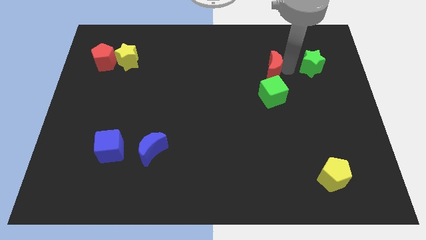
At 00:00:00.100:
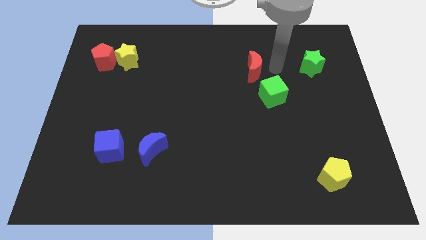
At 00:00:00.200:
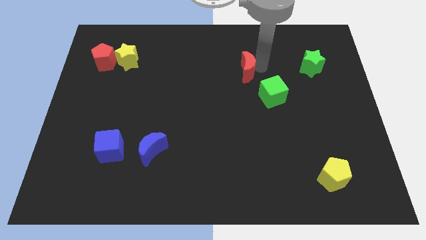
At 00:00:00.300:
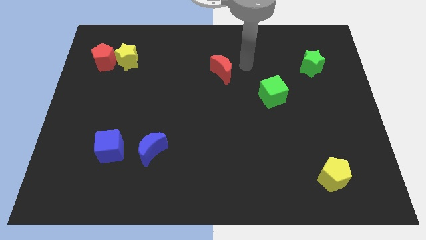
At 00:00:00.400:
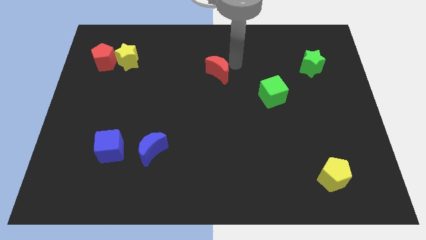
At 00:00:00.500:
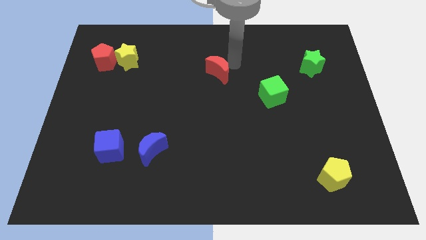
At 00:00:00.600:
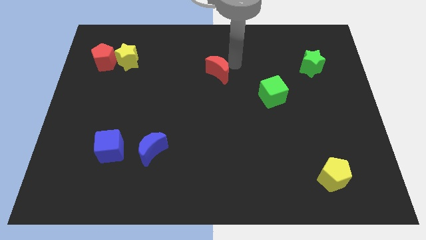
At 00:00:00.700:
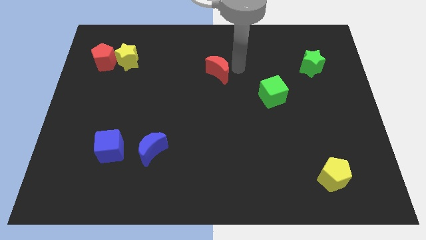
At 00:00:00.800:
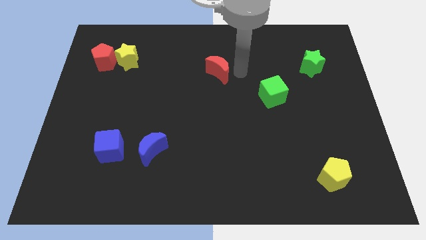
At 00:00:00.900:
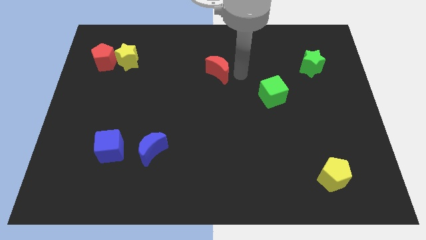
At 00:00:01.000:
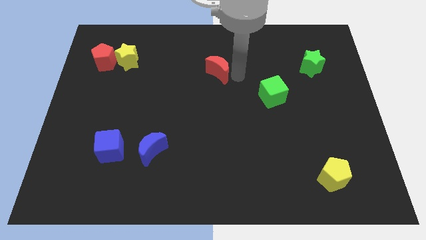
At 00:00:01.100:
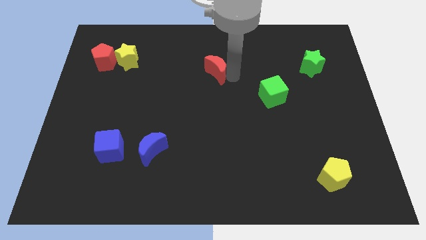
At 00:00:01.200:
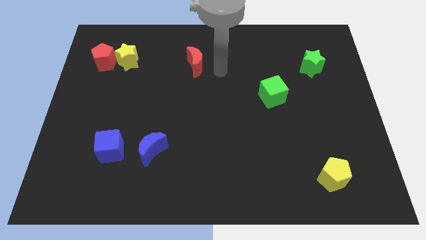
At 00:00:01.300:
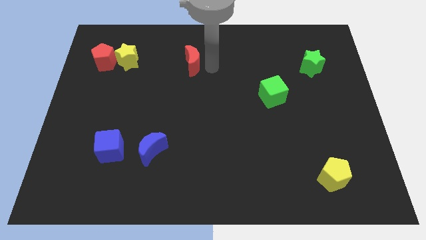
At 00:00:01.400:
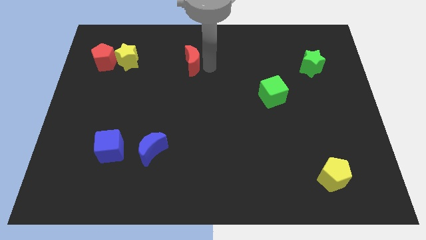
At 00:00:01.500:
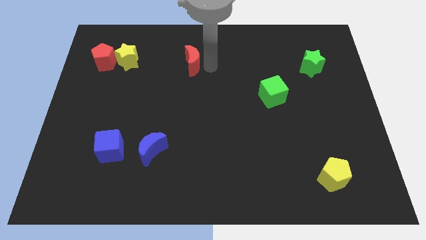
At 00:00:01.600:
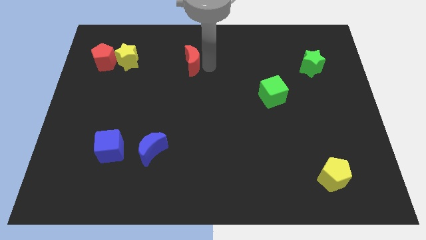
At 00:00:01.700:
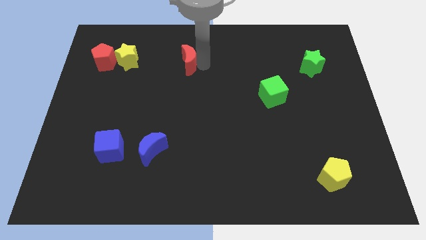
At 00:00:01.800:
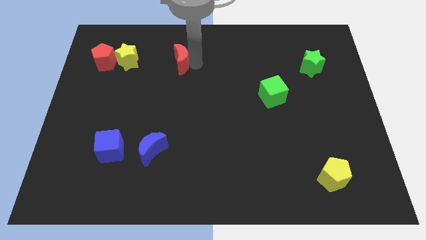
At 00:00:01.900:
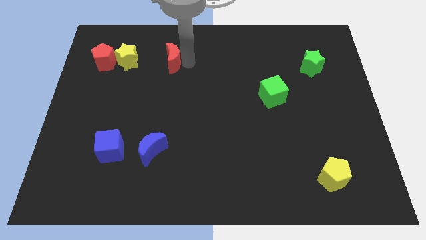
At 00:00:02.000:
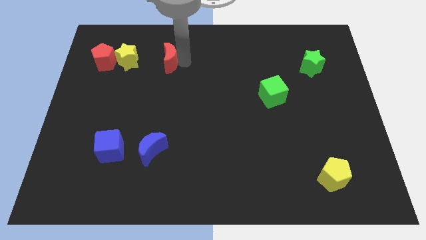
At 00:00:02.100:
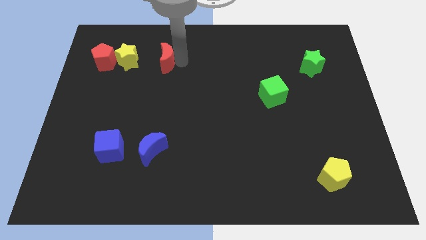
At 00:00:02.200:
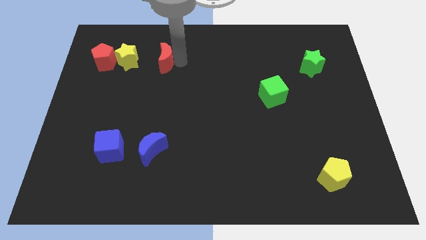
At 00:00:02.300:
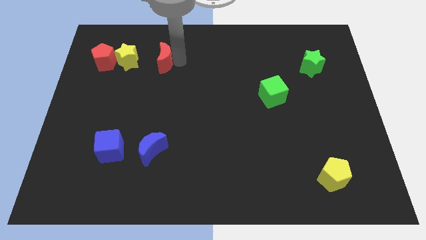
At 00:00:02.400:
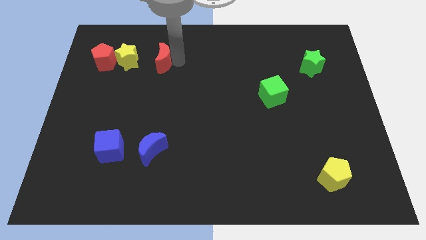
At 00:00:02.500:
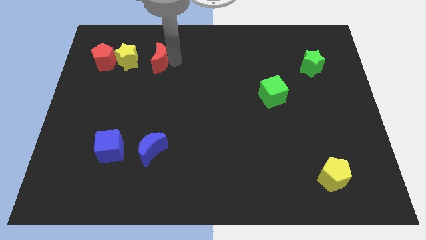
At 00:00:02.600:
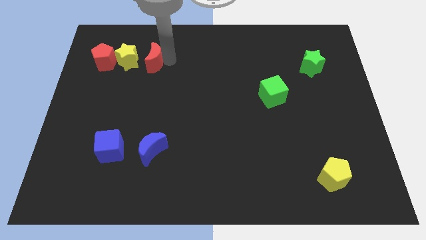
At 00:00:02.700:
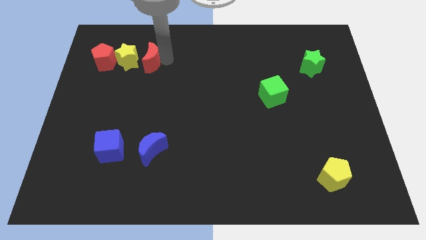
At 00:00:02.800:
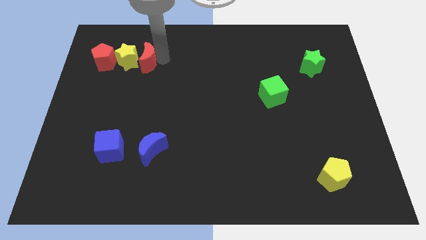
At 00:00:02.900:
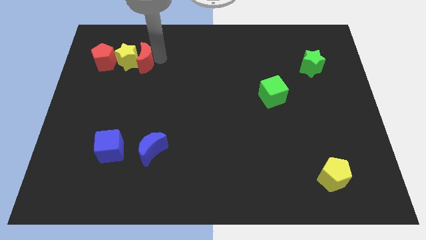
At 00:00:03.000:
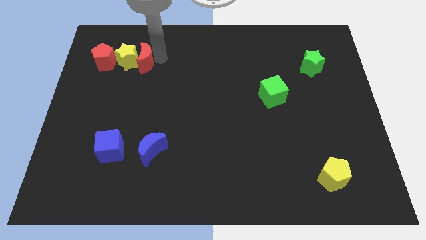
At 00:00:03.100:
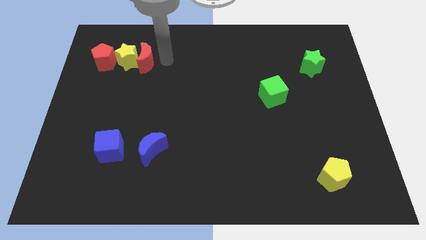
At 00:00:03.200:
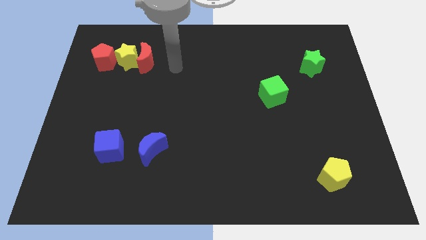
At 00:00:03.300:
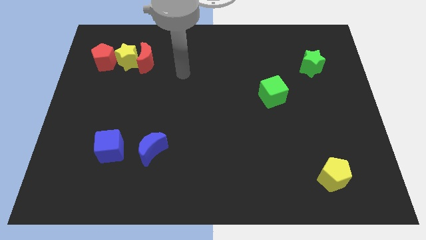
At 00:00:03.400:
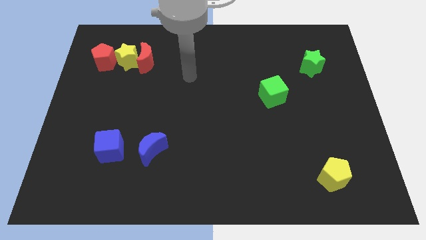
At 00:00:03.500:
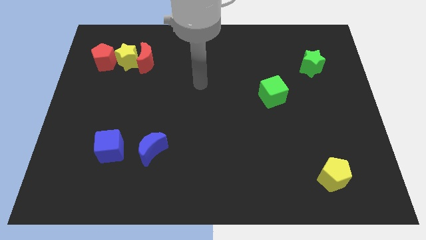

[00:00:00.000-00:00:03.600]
push the red crescent to the right of the yellow star

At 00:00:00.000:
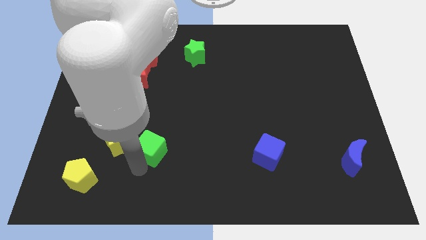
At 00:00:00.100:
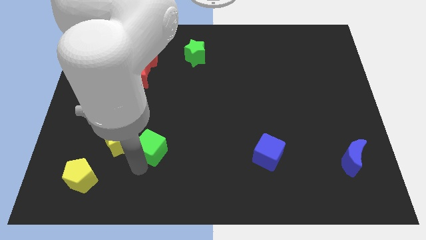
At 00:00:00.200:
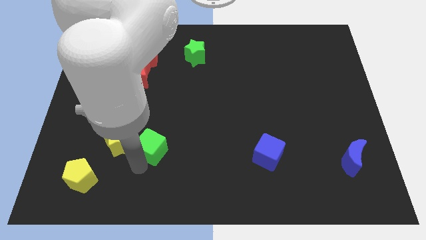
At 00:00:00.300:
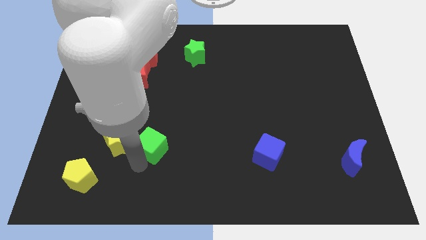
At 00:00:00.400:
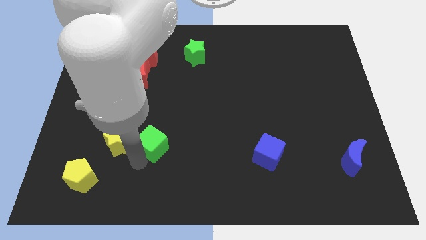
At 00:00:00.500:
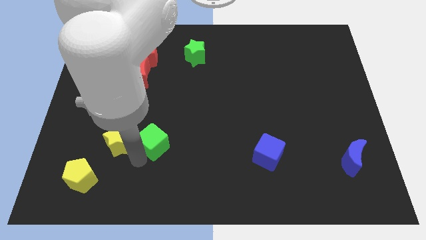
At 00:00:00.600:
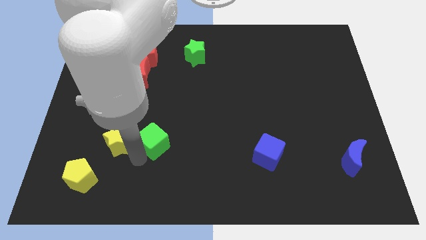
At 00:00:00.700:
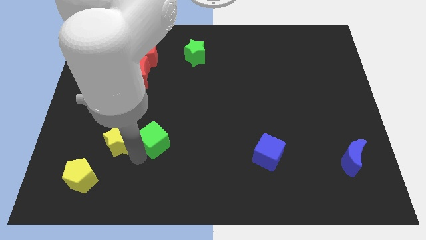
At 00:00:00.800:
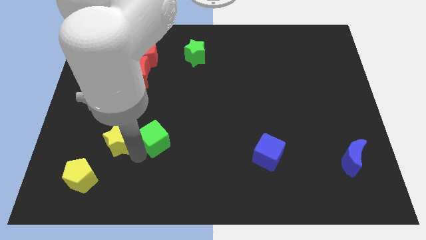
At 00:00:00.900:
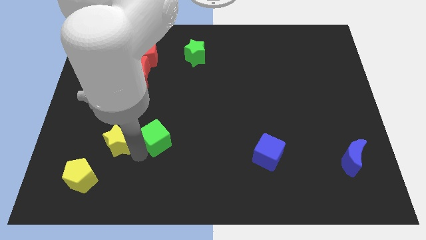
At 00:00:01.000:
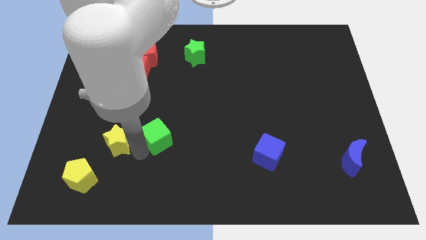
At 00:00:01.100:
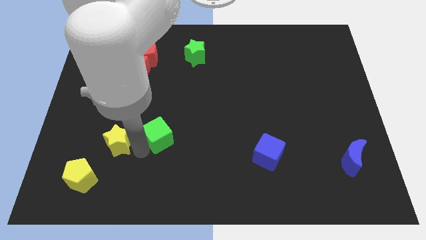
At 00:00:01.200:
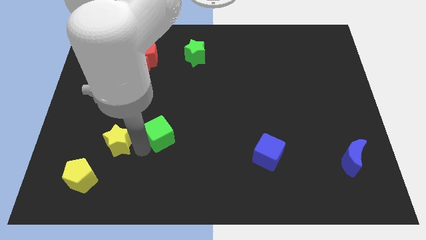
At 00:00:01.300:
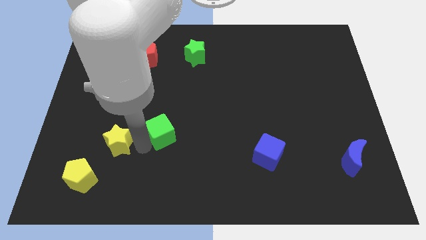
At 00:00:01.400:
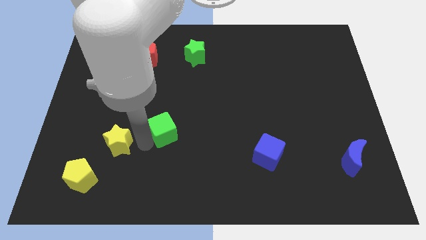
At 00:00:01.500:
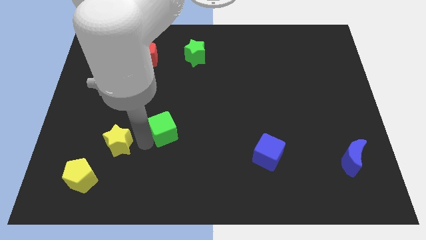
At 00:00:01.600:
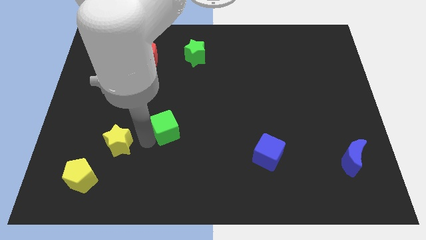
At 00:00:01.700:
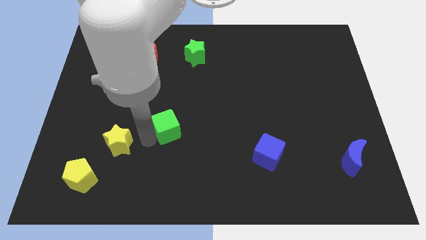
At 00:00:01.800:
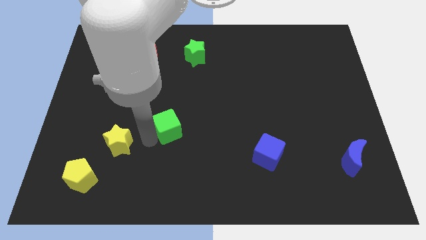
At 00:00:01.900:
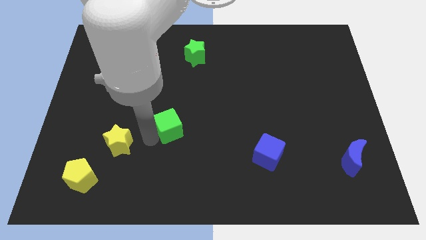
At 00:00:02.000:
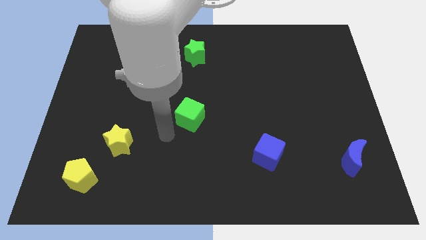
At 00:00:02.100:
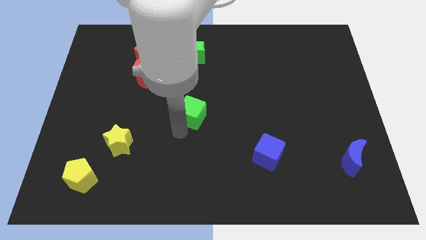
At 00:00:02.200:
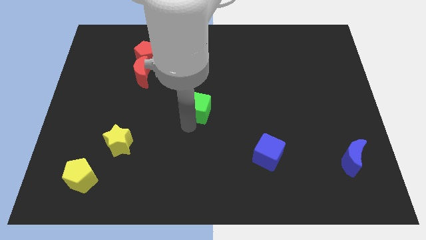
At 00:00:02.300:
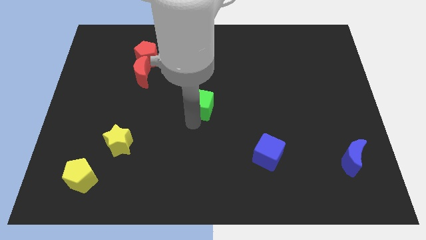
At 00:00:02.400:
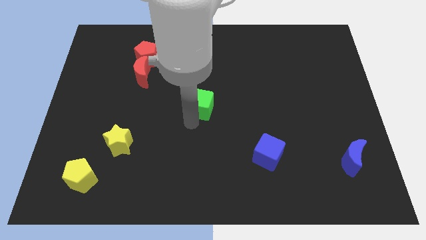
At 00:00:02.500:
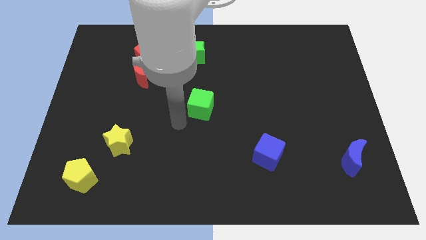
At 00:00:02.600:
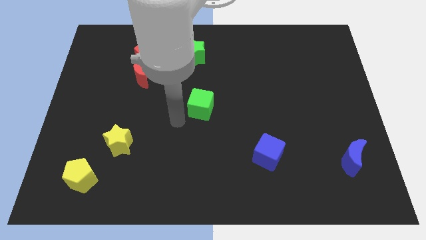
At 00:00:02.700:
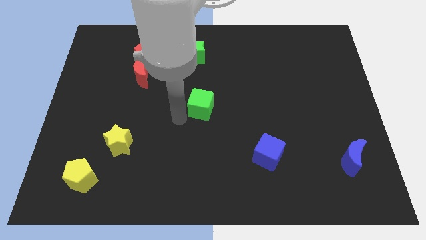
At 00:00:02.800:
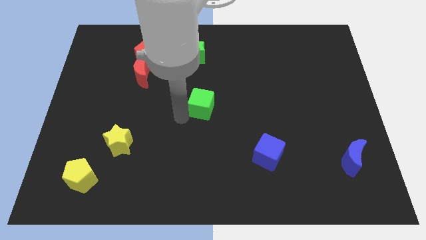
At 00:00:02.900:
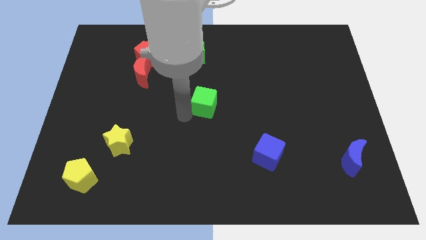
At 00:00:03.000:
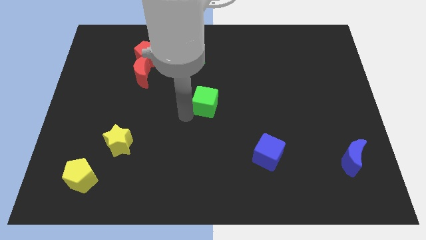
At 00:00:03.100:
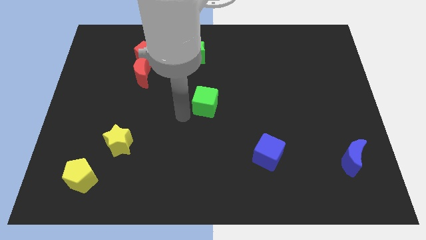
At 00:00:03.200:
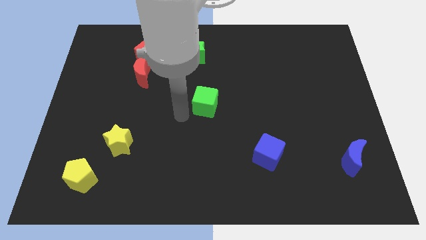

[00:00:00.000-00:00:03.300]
move the green cube to the center

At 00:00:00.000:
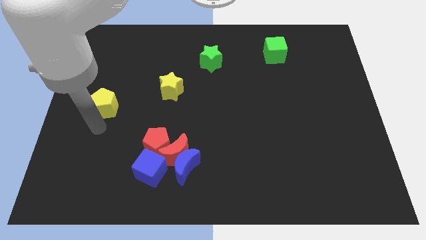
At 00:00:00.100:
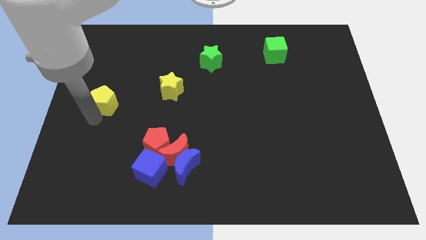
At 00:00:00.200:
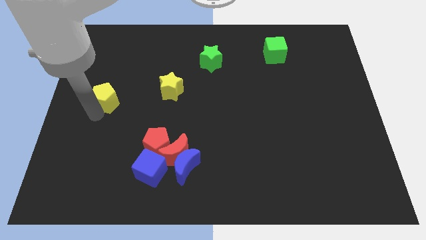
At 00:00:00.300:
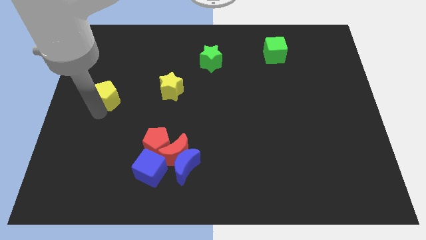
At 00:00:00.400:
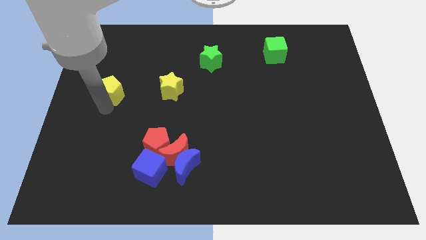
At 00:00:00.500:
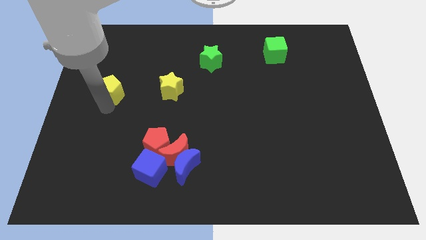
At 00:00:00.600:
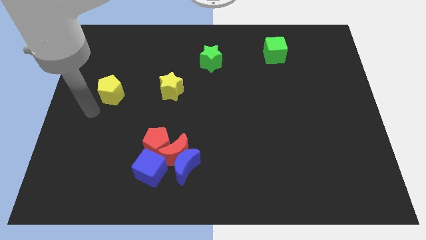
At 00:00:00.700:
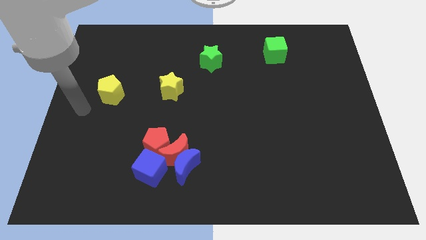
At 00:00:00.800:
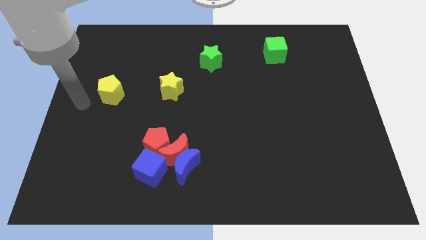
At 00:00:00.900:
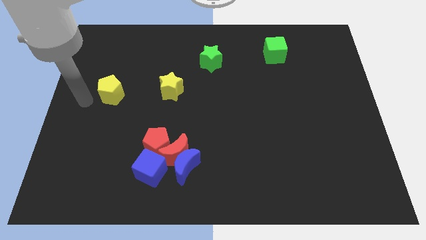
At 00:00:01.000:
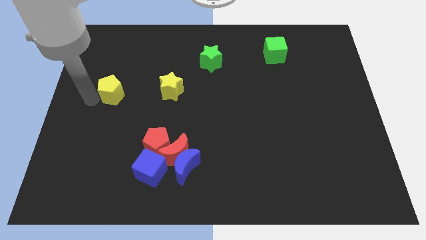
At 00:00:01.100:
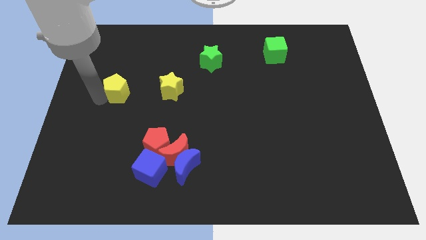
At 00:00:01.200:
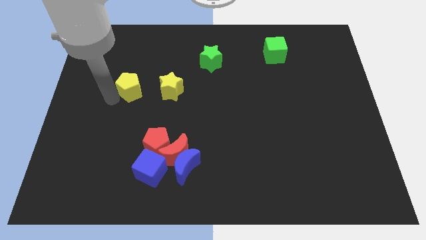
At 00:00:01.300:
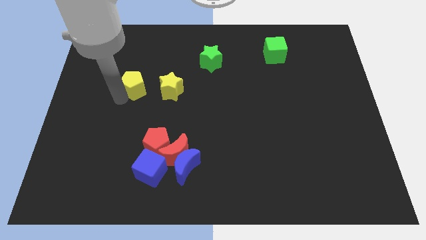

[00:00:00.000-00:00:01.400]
place the yellow pentagon to the left of the yellow star

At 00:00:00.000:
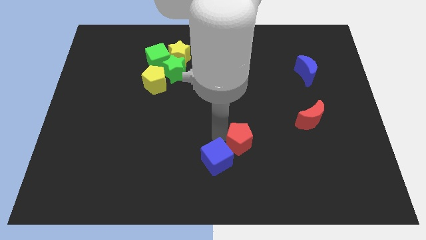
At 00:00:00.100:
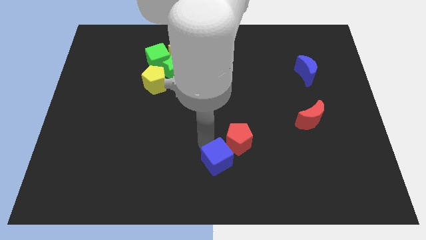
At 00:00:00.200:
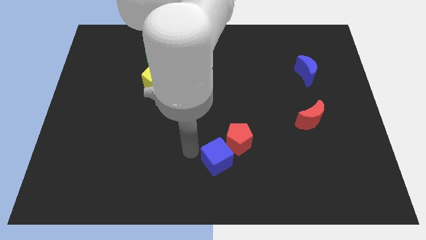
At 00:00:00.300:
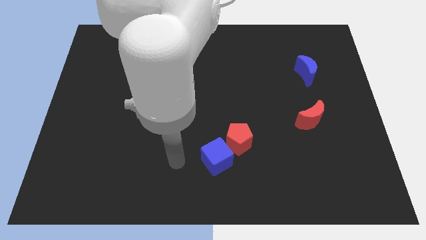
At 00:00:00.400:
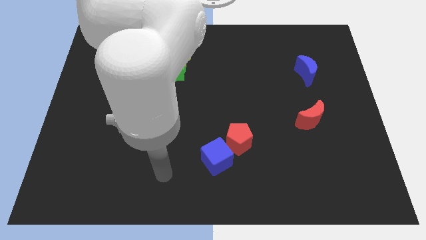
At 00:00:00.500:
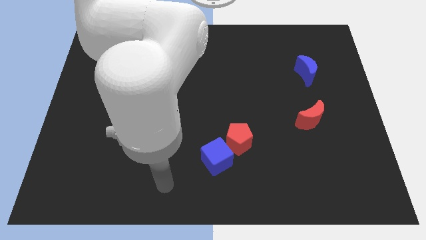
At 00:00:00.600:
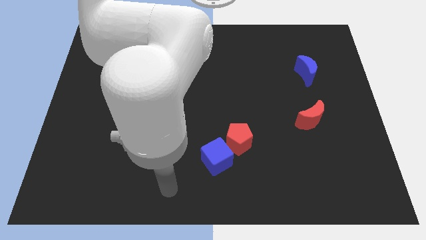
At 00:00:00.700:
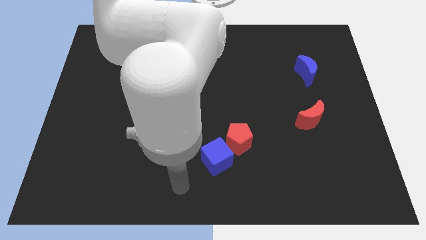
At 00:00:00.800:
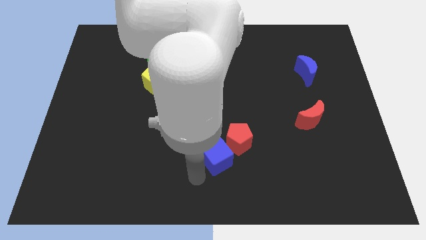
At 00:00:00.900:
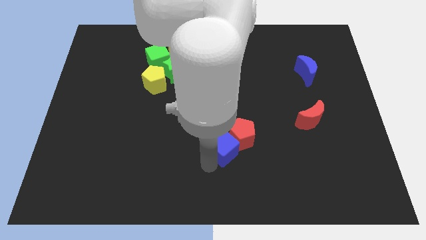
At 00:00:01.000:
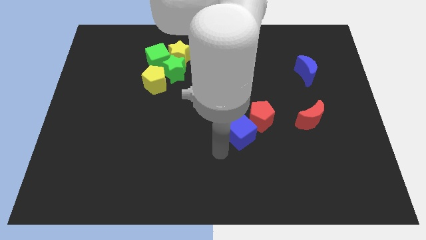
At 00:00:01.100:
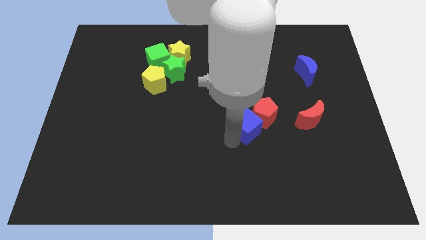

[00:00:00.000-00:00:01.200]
move the blue cube along with the red pentagon towards the left of the red crescent
